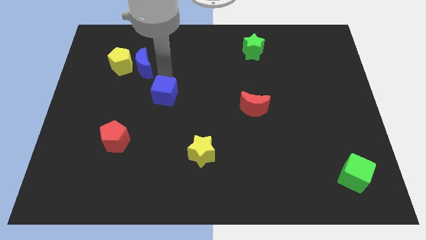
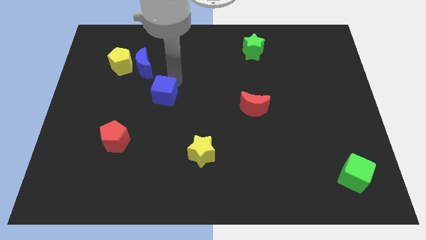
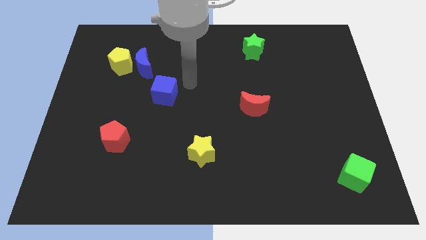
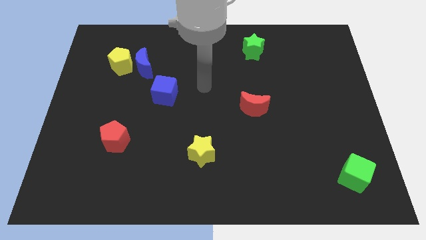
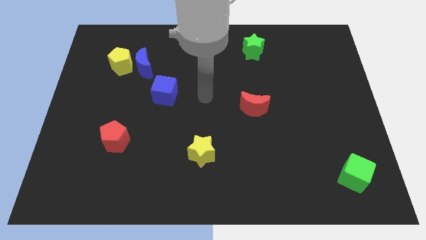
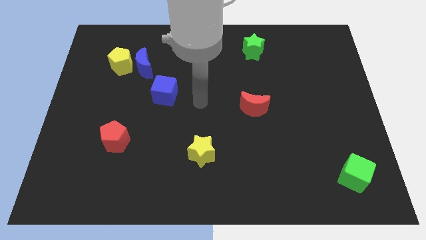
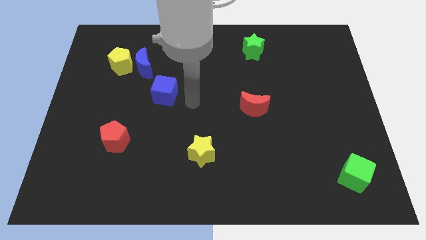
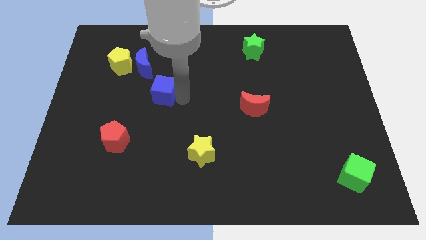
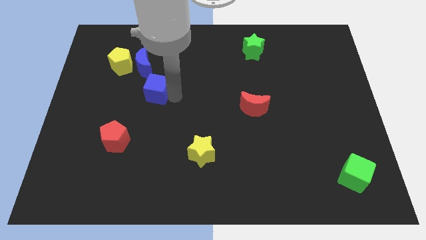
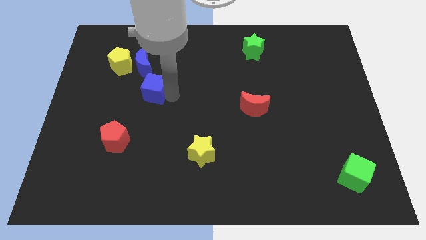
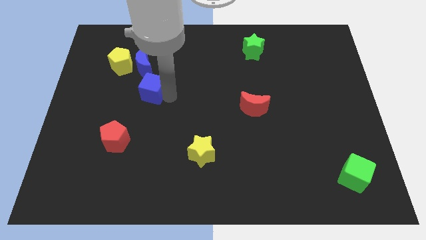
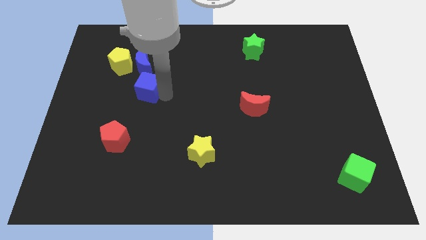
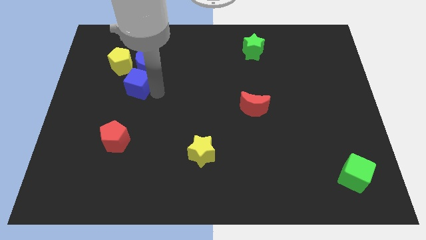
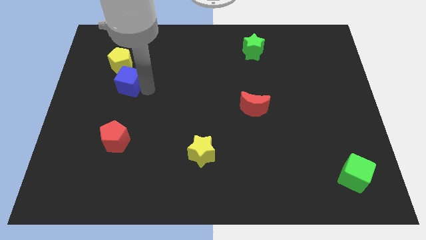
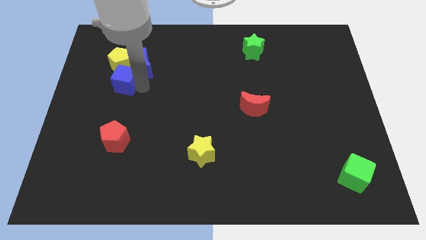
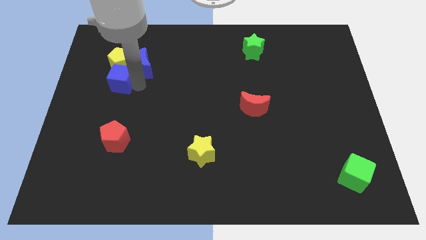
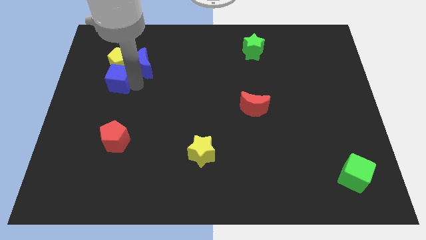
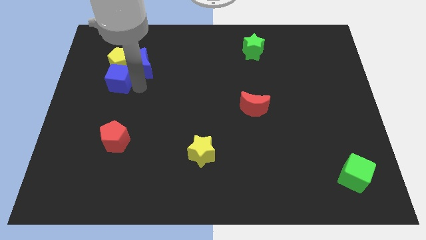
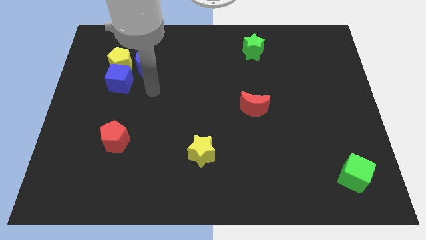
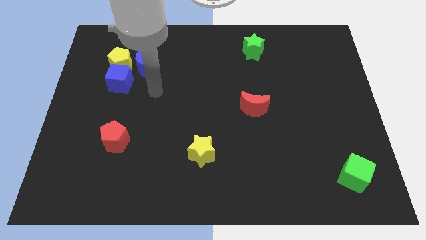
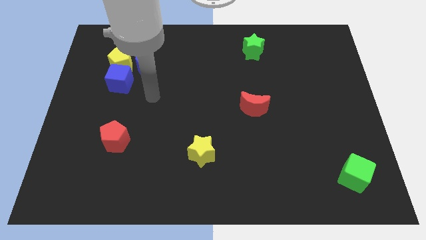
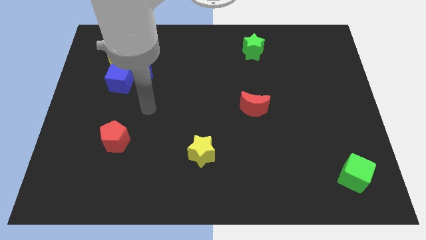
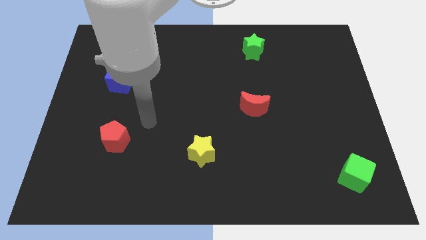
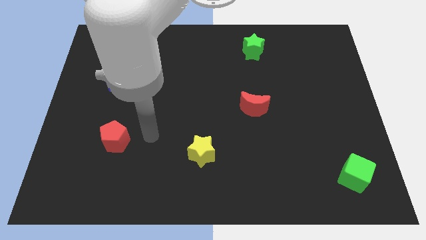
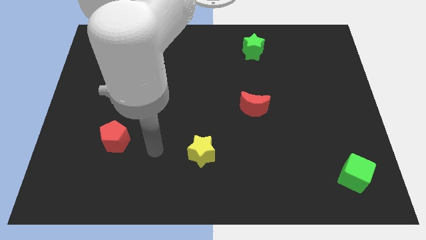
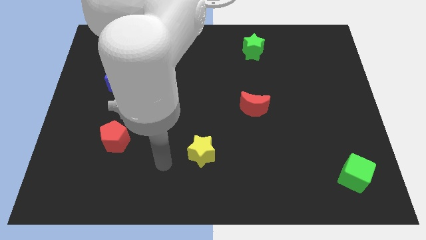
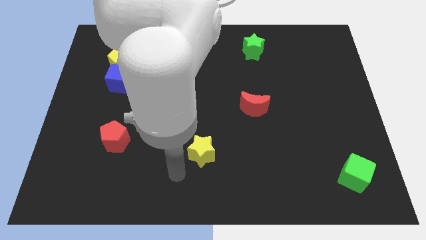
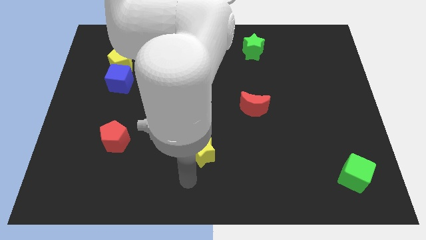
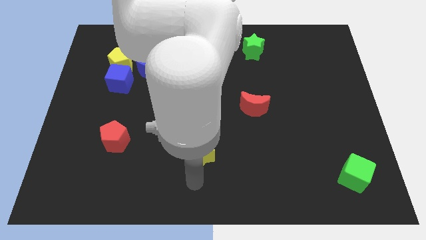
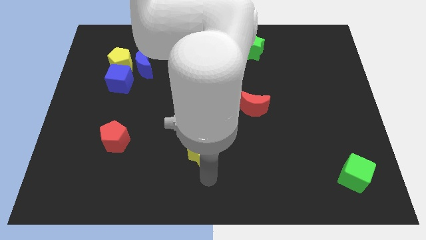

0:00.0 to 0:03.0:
place the blue cube vertically below the yellow pentagon

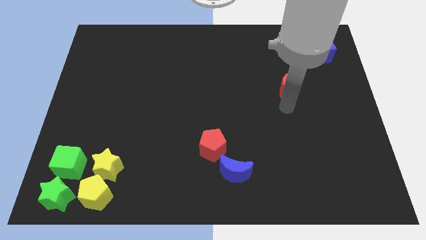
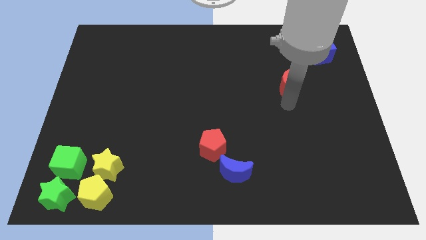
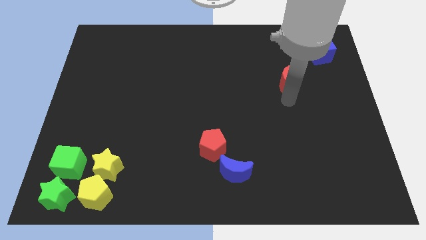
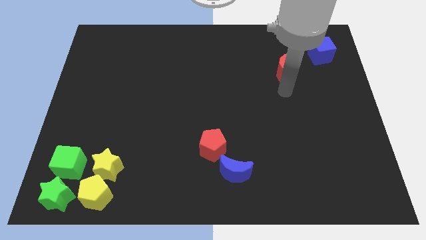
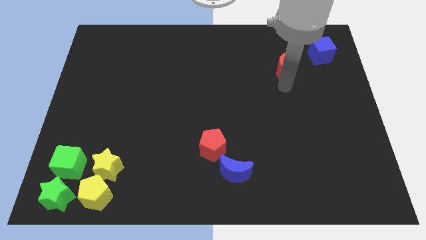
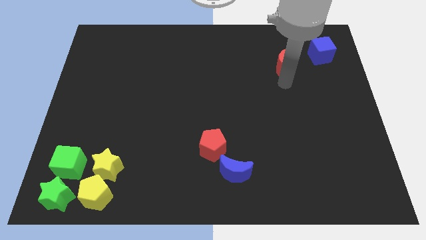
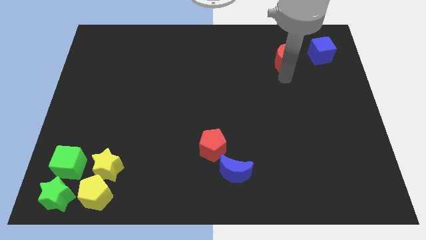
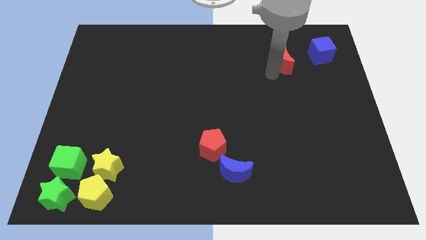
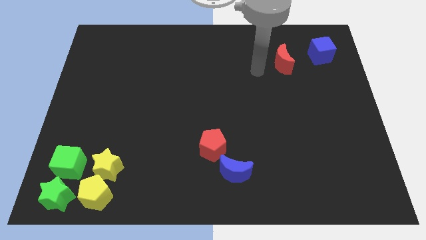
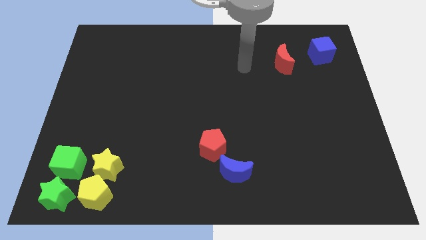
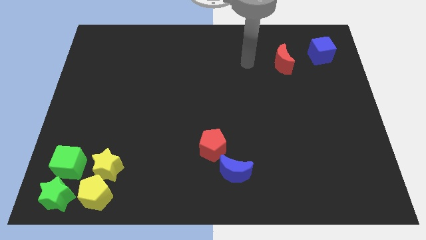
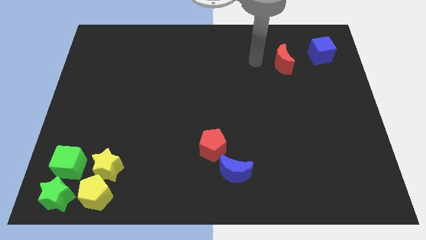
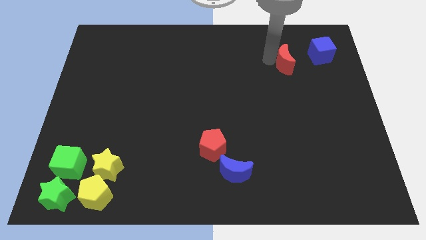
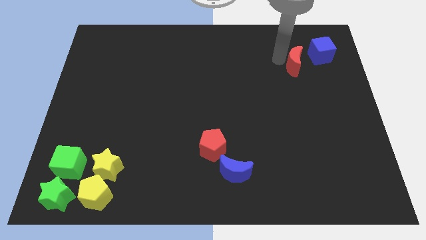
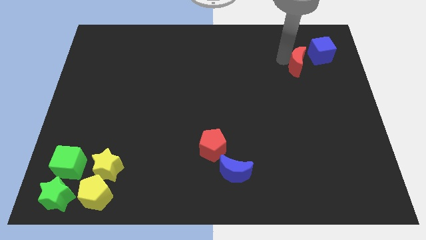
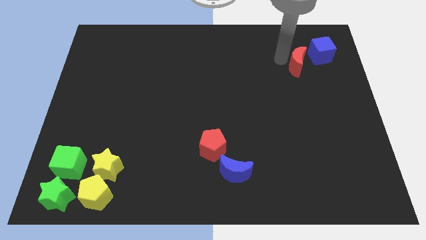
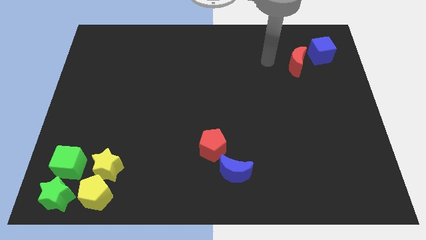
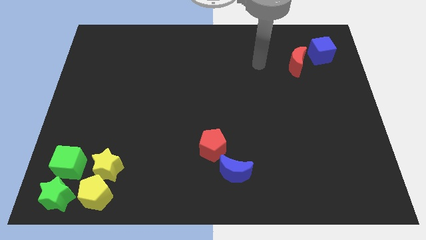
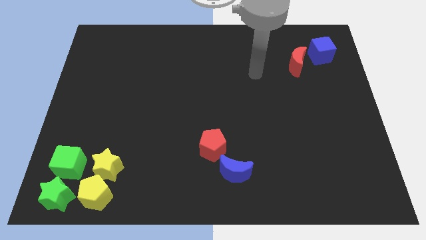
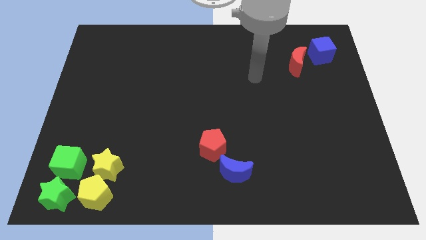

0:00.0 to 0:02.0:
place the red moon left to the blue cube

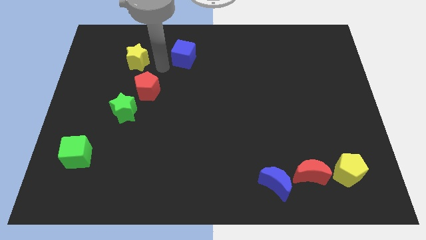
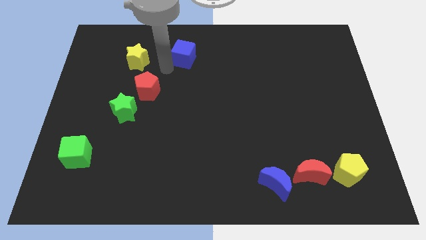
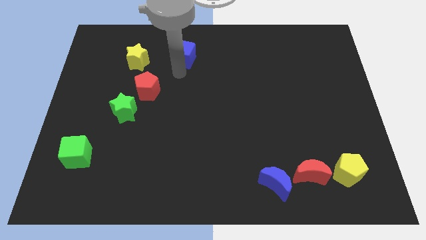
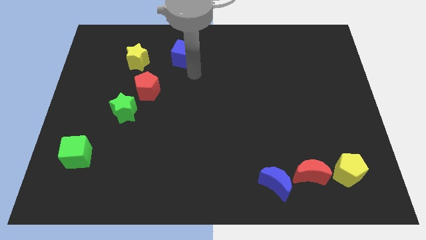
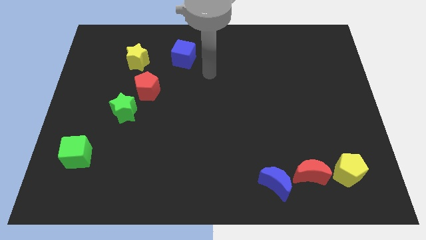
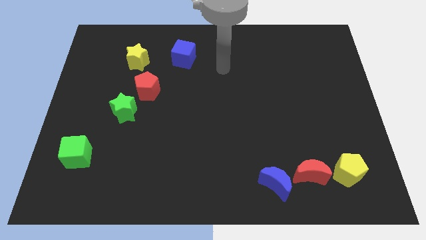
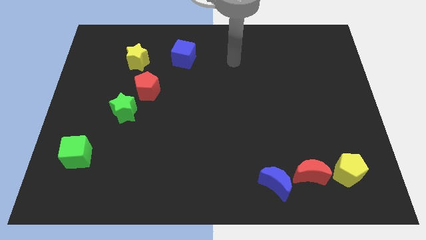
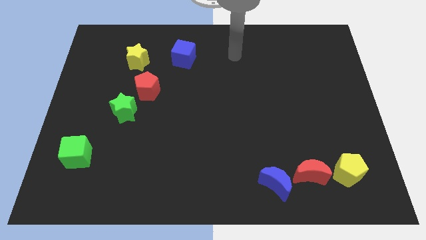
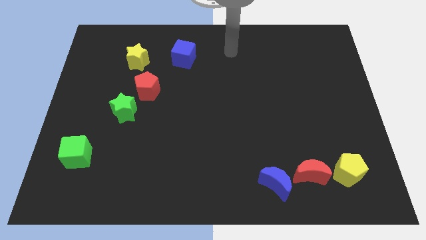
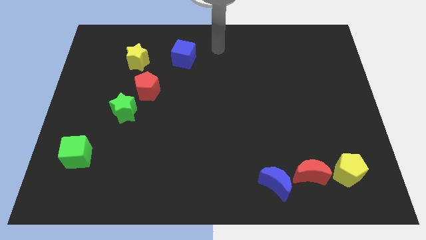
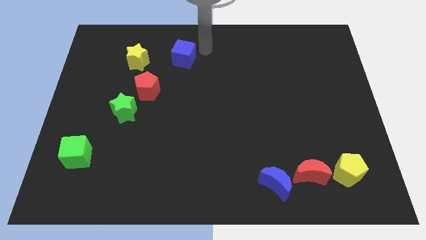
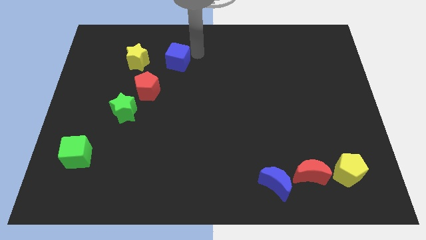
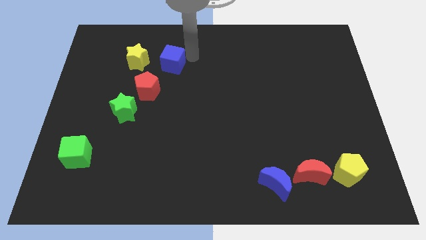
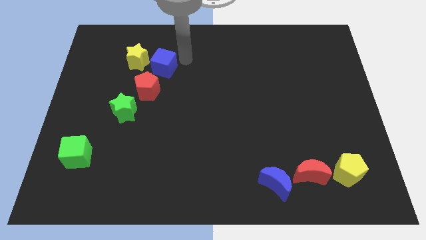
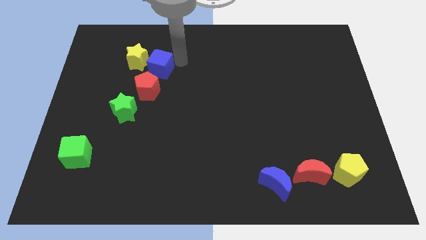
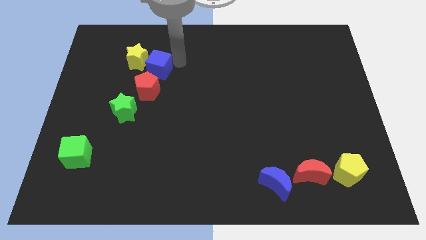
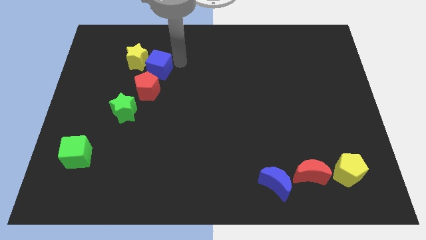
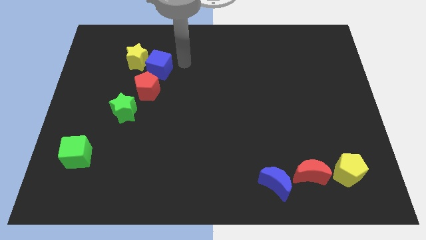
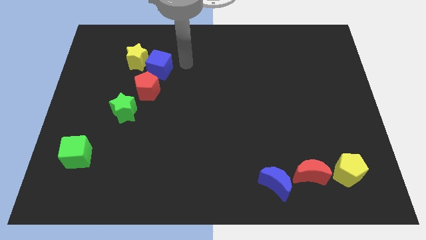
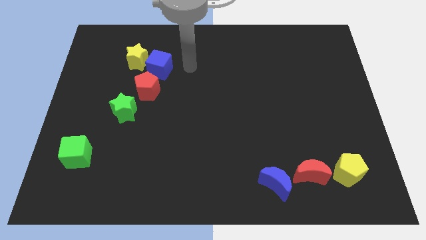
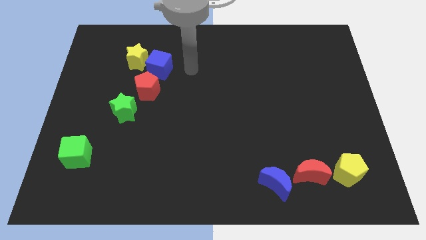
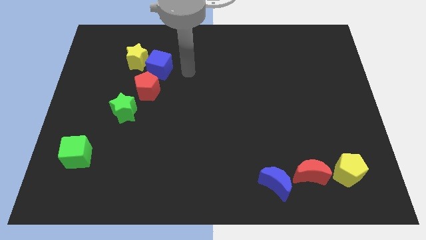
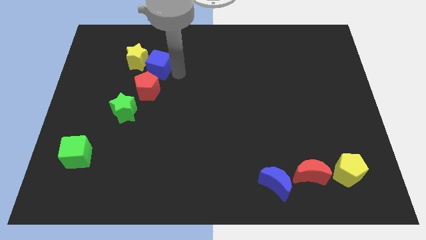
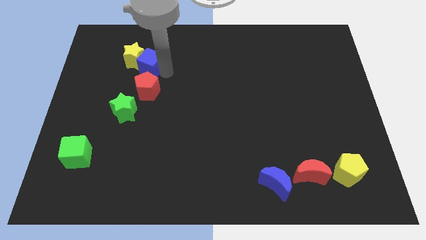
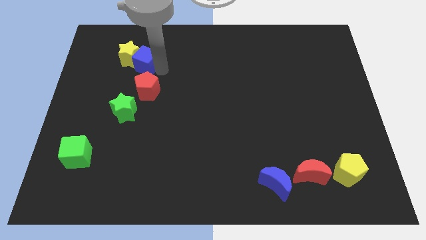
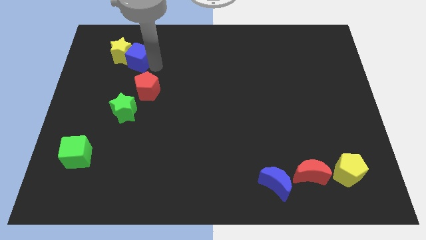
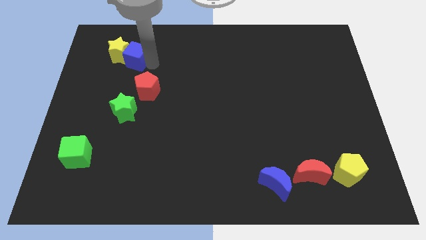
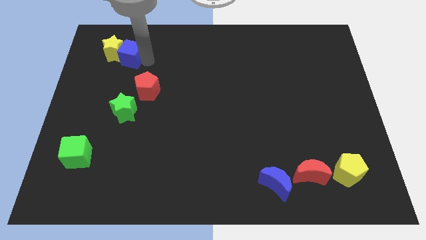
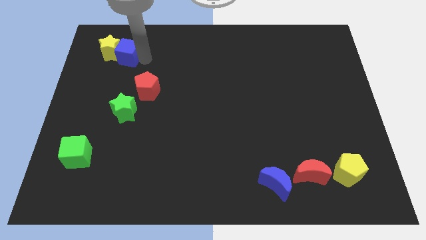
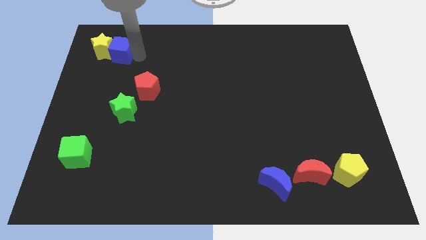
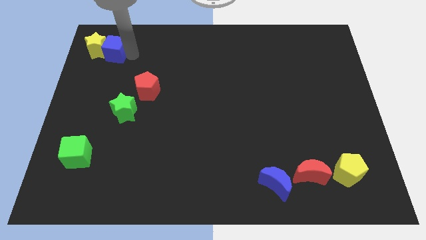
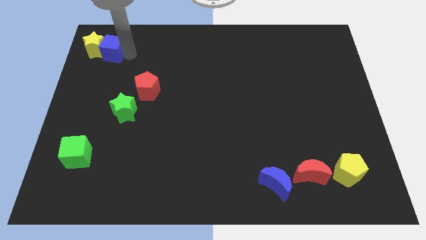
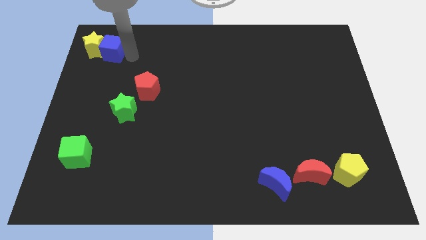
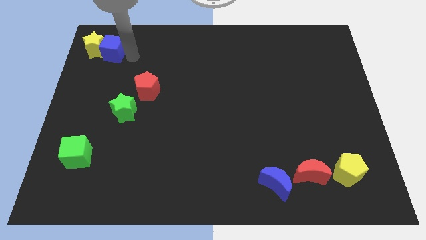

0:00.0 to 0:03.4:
push the blue cube to the right of the yellow star

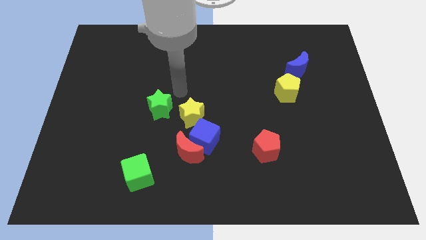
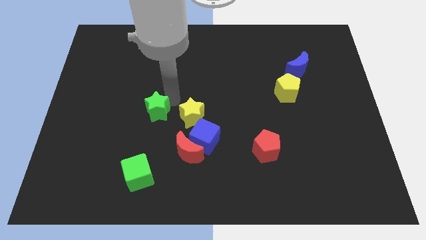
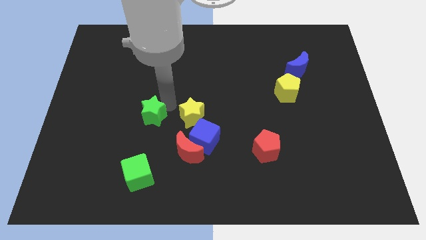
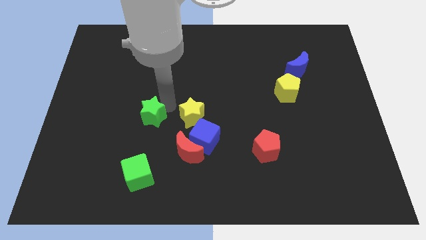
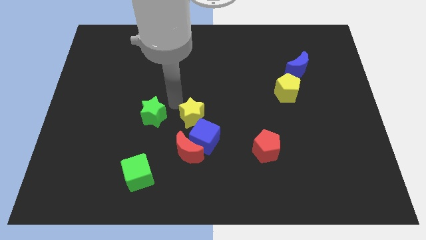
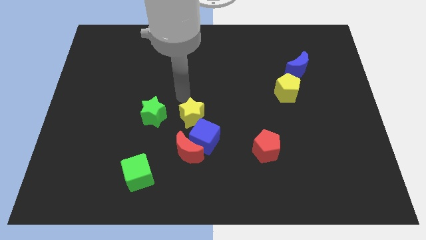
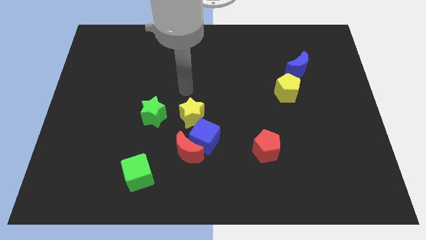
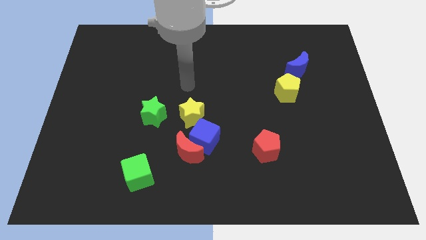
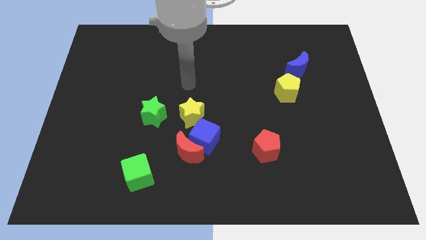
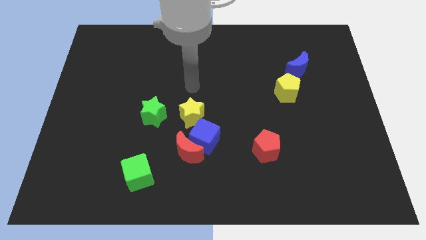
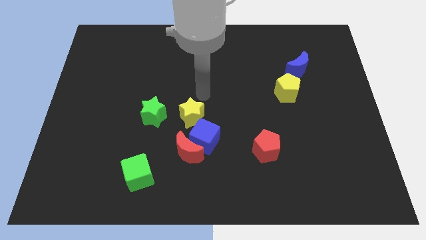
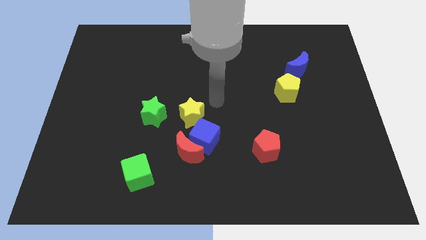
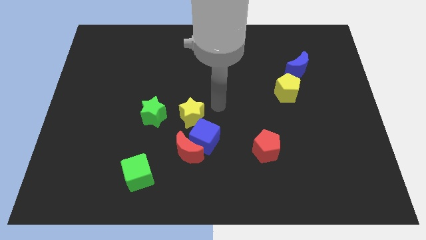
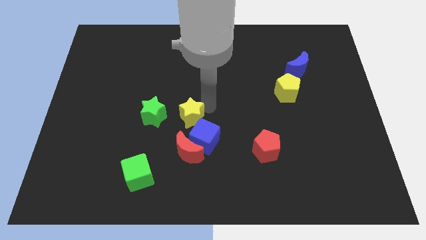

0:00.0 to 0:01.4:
move the green star to the left side of the yellow star
